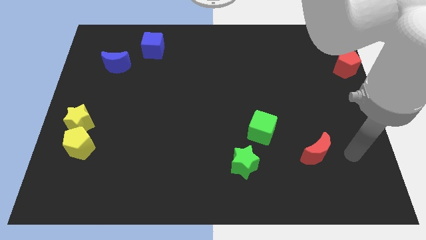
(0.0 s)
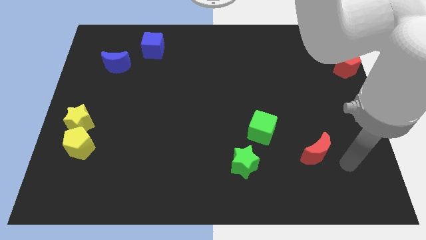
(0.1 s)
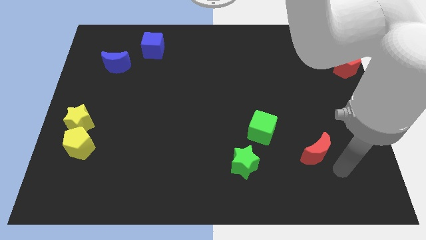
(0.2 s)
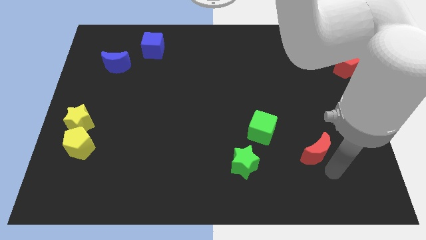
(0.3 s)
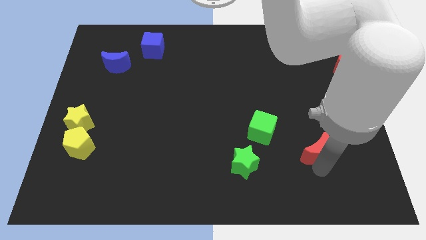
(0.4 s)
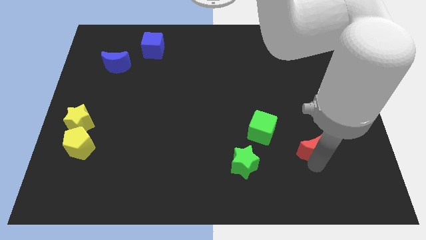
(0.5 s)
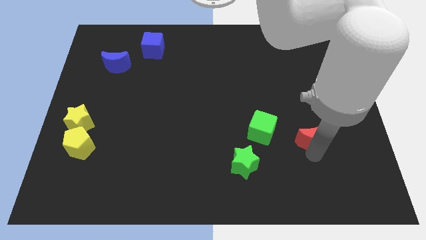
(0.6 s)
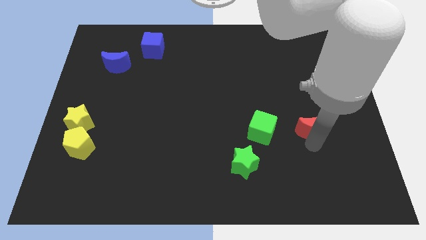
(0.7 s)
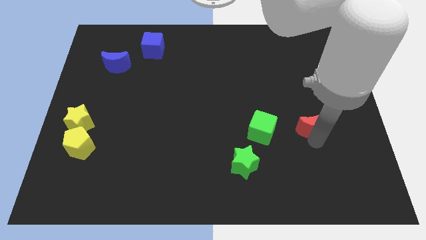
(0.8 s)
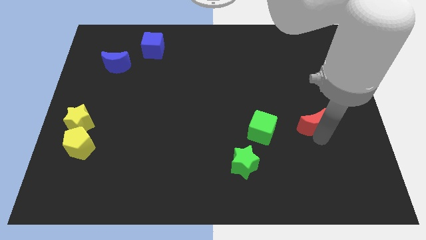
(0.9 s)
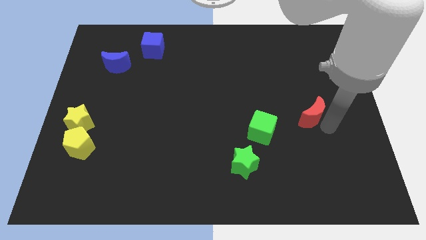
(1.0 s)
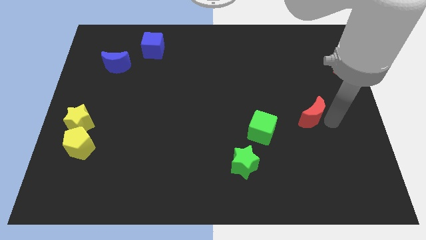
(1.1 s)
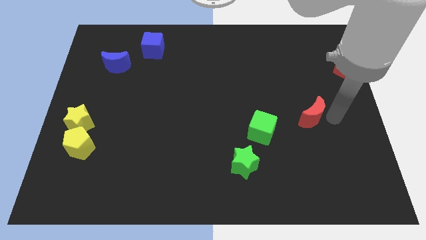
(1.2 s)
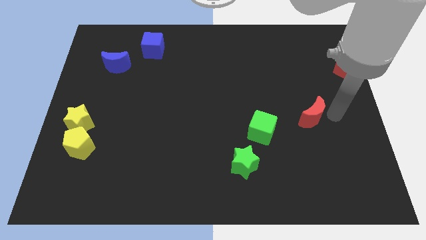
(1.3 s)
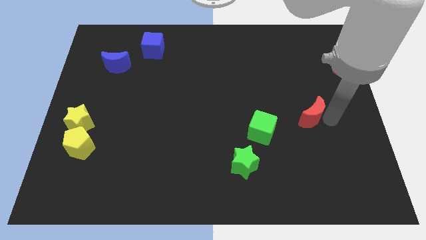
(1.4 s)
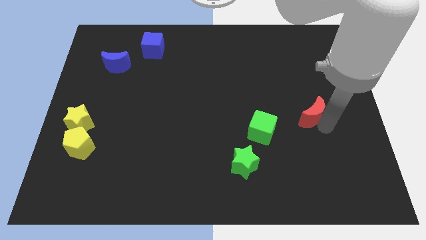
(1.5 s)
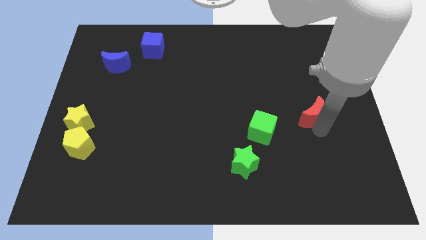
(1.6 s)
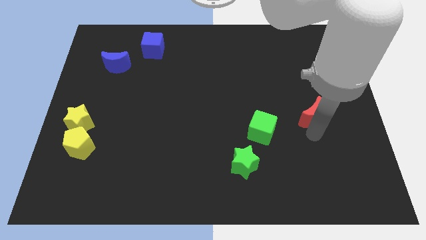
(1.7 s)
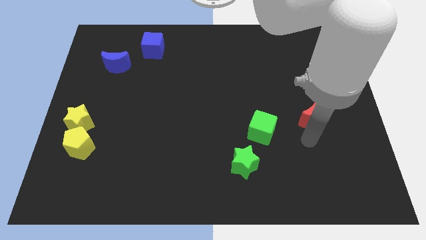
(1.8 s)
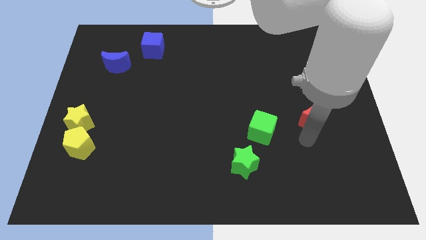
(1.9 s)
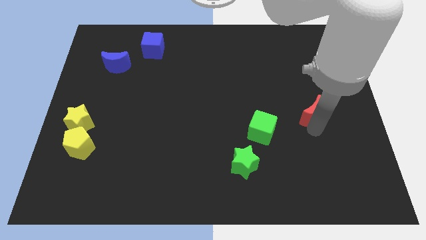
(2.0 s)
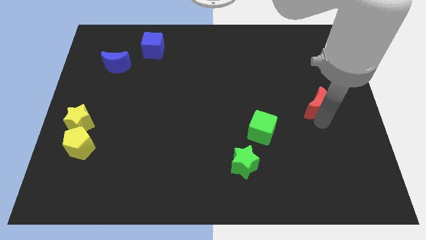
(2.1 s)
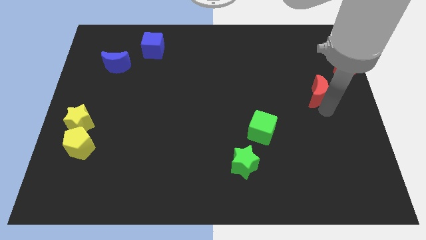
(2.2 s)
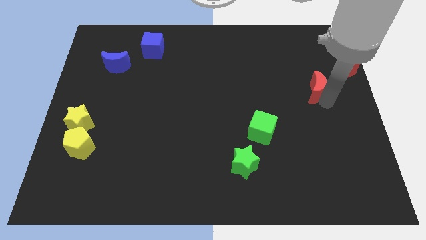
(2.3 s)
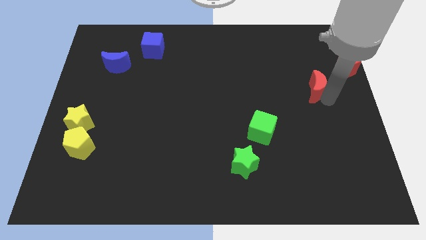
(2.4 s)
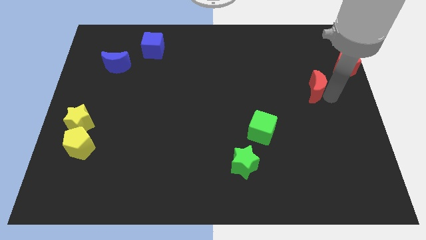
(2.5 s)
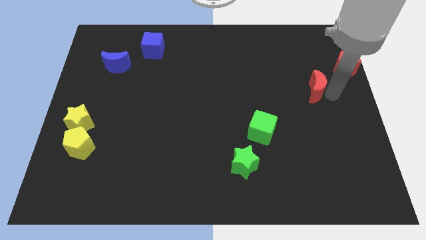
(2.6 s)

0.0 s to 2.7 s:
place the red moon below diagonal to the red pentagon

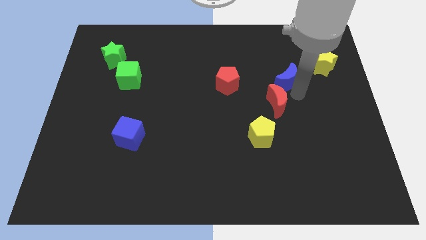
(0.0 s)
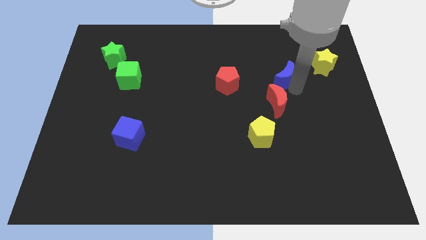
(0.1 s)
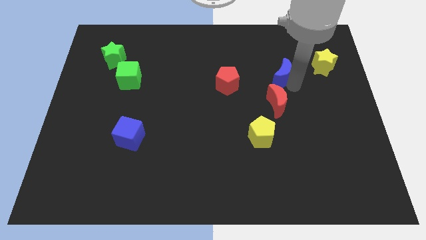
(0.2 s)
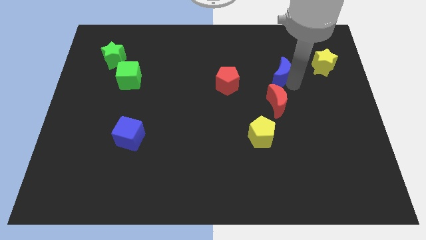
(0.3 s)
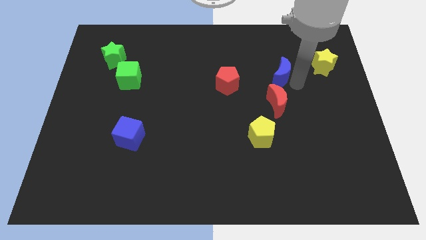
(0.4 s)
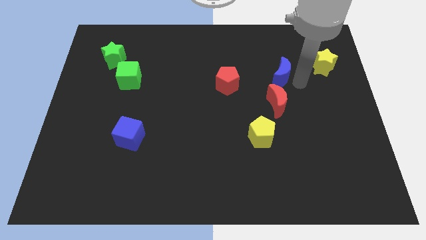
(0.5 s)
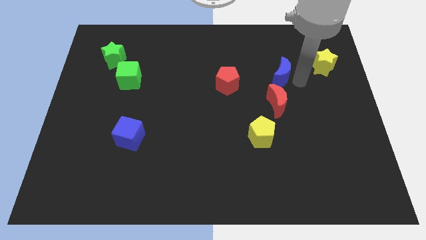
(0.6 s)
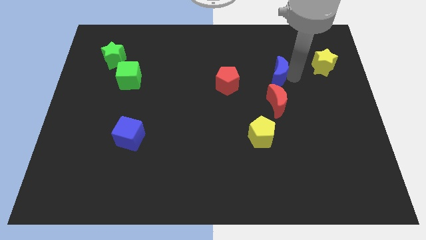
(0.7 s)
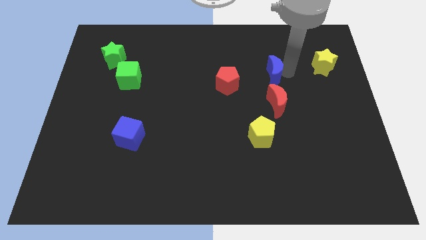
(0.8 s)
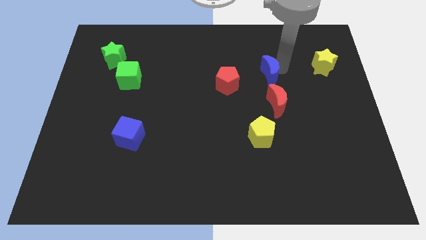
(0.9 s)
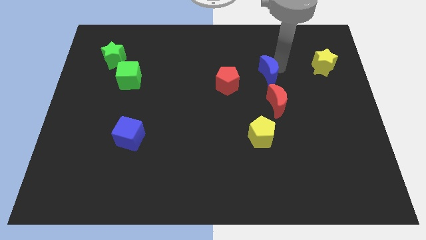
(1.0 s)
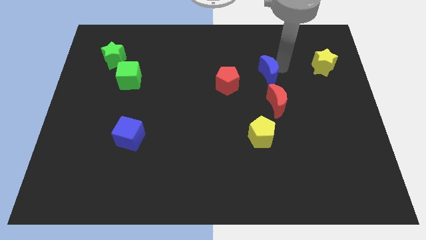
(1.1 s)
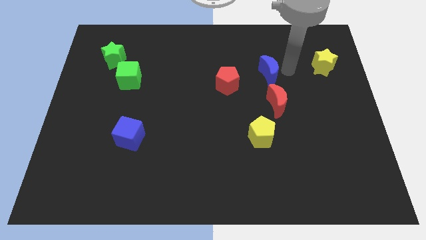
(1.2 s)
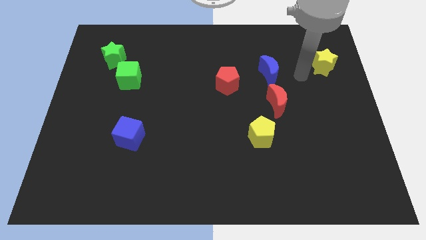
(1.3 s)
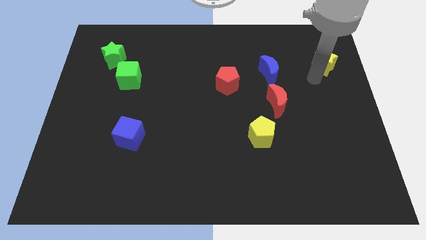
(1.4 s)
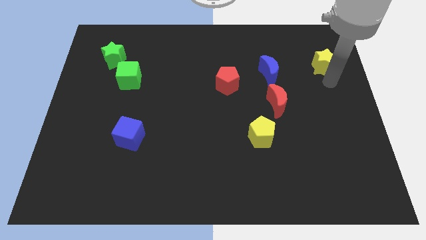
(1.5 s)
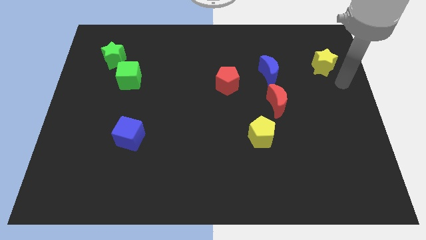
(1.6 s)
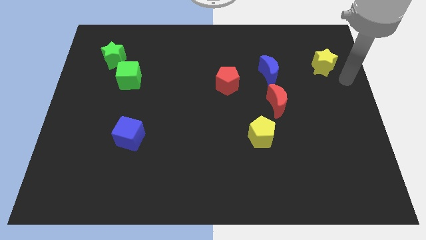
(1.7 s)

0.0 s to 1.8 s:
place the blue crescent above the red crescent

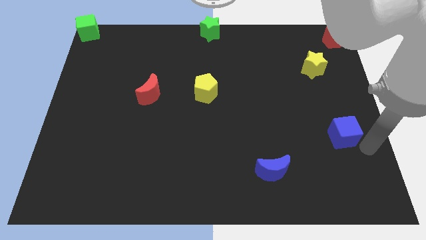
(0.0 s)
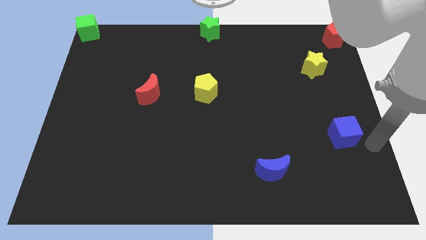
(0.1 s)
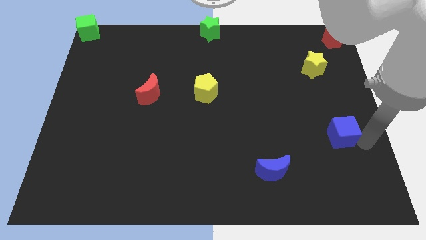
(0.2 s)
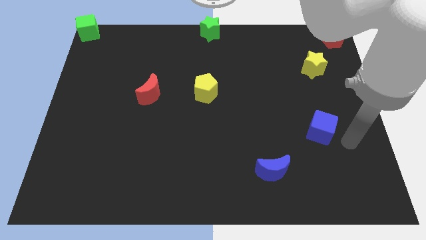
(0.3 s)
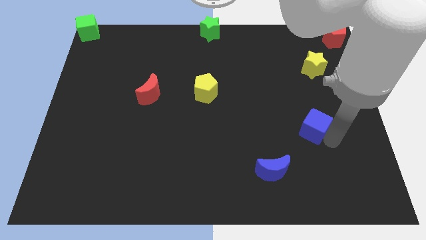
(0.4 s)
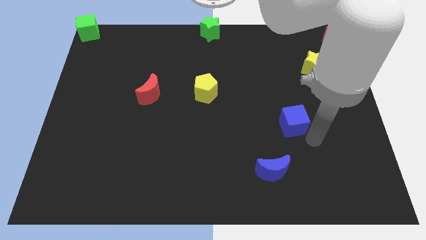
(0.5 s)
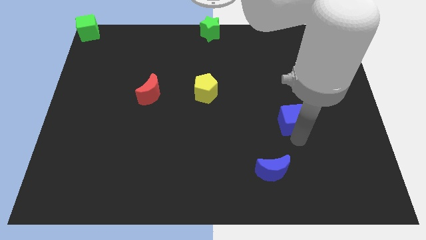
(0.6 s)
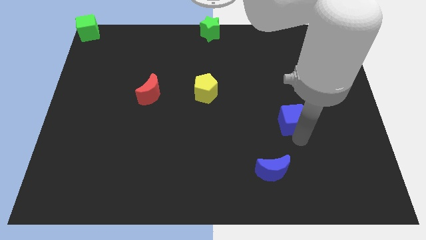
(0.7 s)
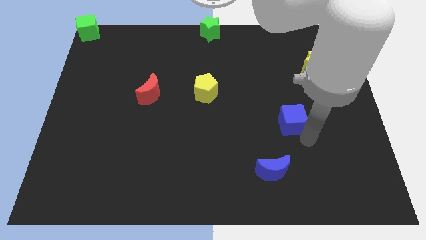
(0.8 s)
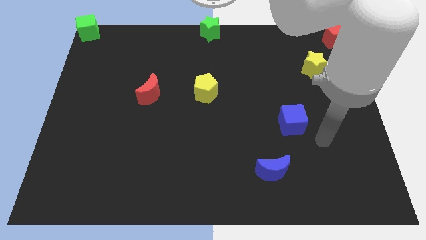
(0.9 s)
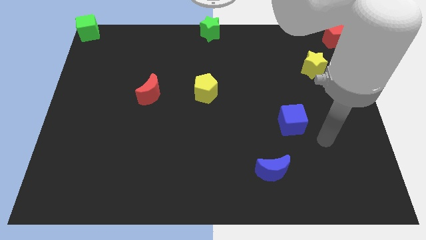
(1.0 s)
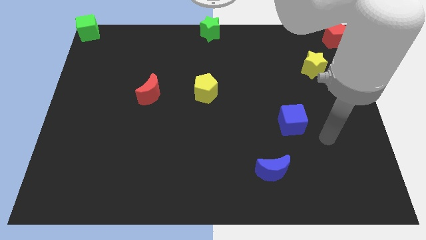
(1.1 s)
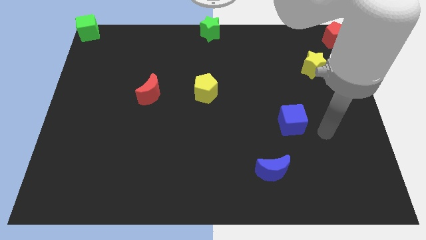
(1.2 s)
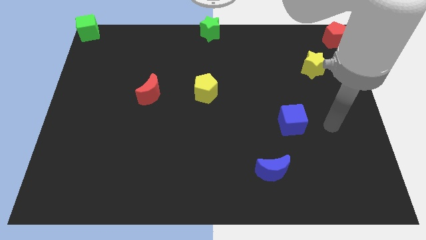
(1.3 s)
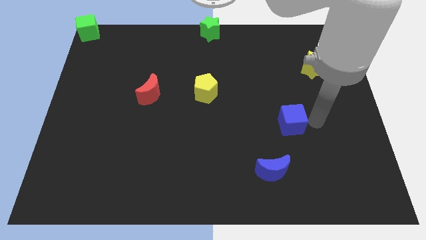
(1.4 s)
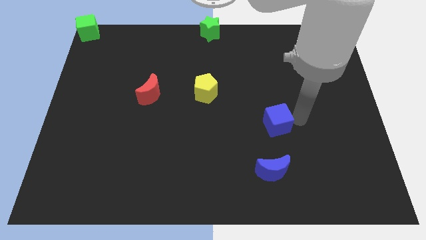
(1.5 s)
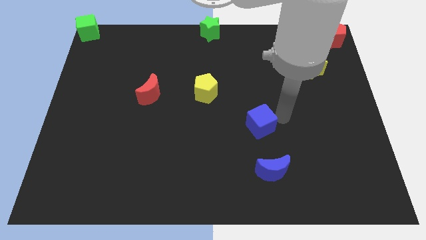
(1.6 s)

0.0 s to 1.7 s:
push blue cube above blue crescent

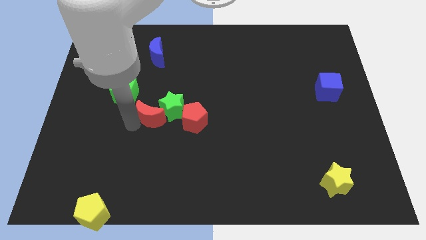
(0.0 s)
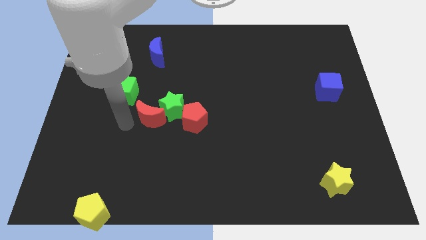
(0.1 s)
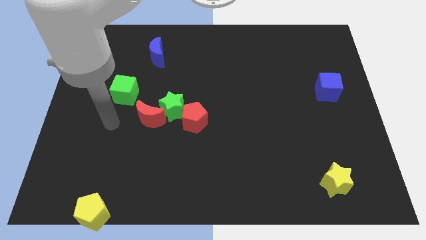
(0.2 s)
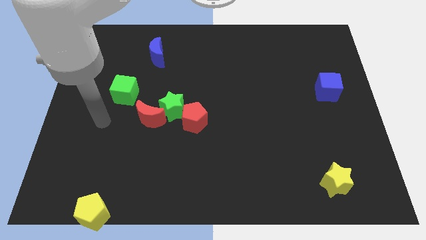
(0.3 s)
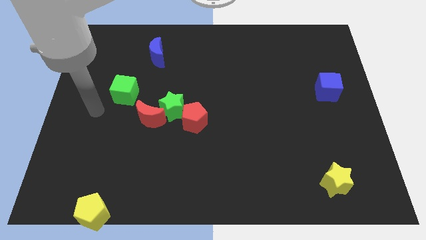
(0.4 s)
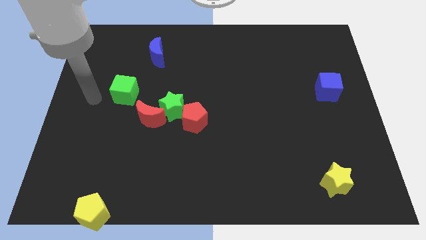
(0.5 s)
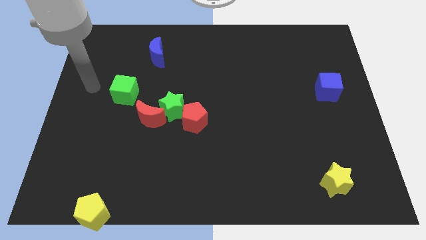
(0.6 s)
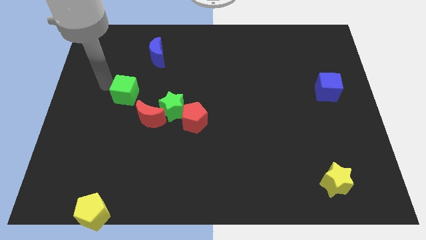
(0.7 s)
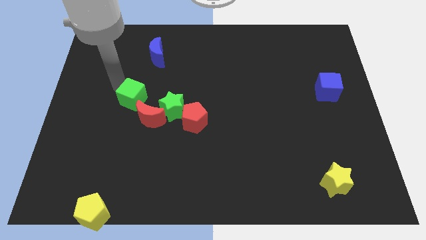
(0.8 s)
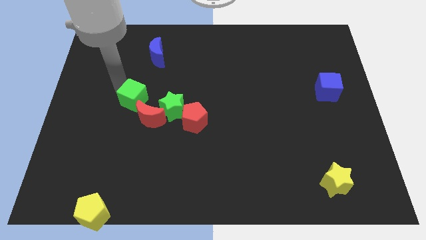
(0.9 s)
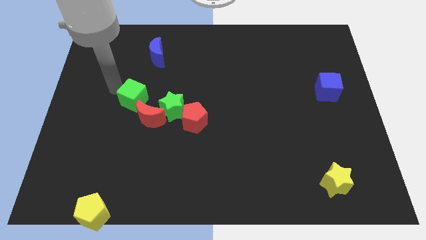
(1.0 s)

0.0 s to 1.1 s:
place your arm close to green cube

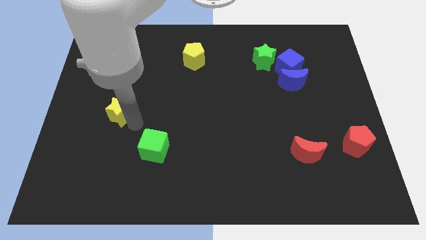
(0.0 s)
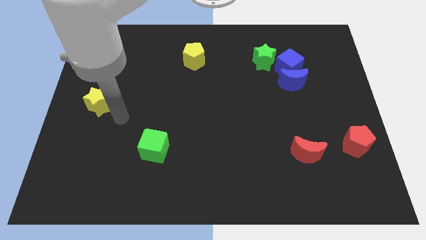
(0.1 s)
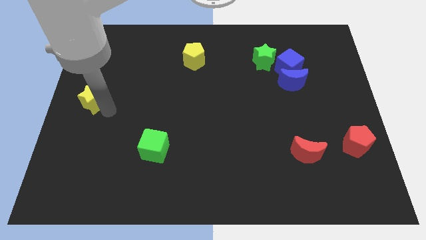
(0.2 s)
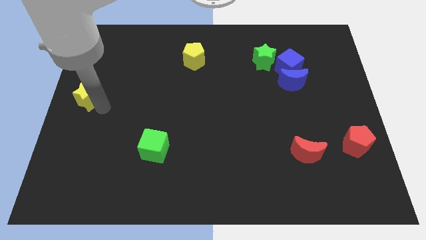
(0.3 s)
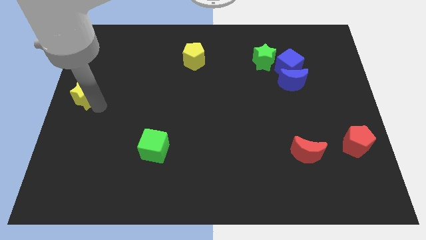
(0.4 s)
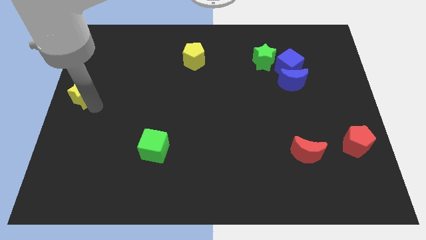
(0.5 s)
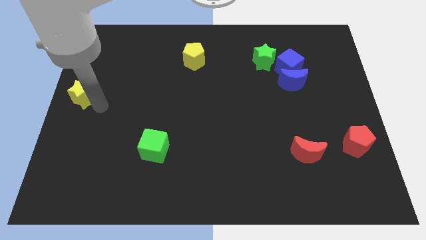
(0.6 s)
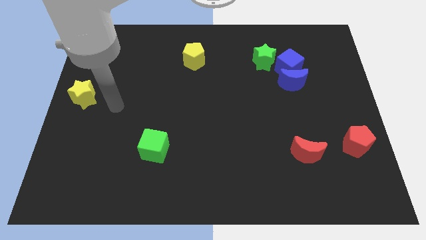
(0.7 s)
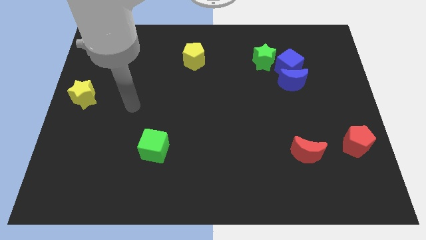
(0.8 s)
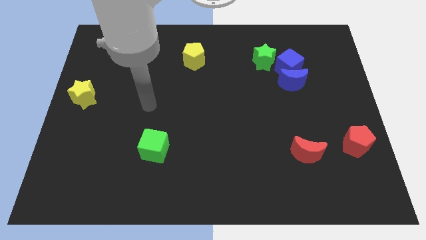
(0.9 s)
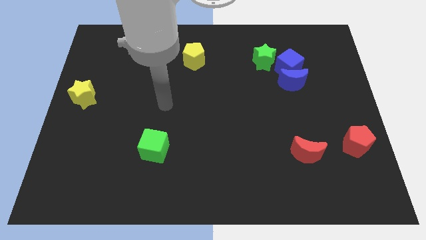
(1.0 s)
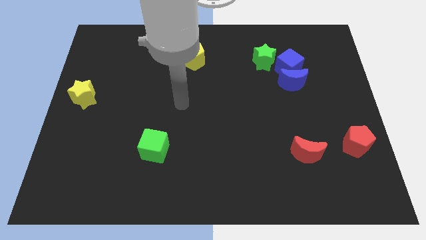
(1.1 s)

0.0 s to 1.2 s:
push the yellow star to the center left of the board

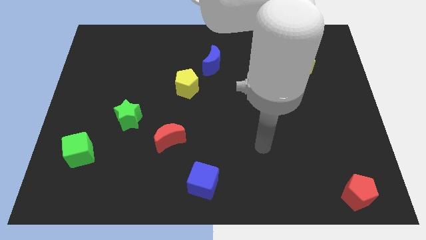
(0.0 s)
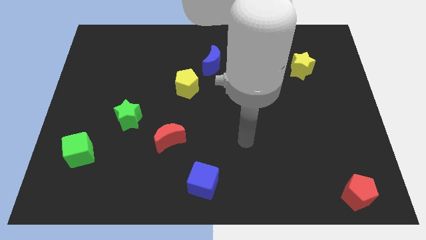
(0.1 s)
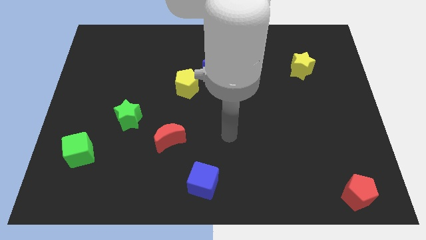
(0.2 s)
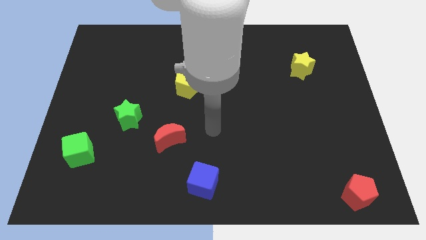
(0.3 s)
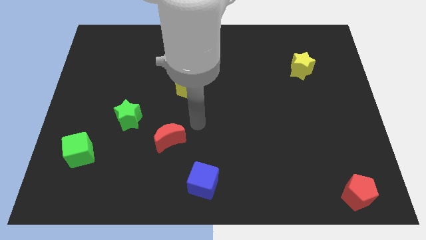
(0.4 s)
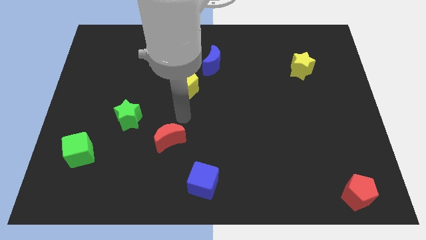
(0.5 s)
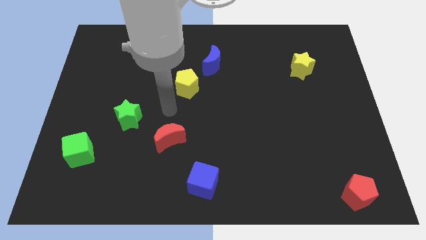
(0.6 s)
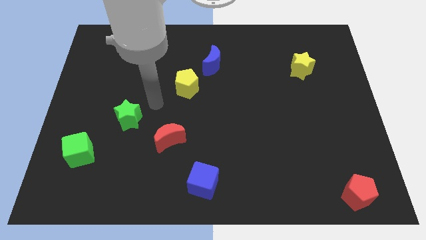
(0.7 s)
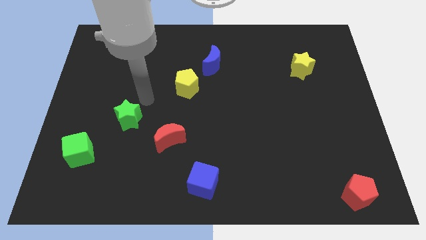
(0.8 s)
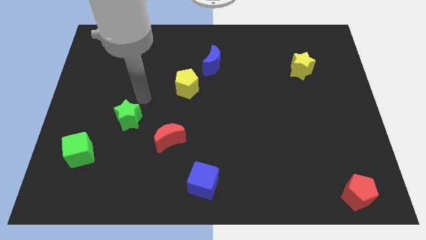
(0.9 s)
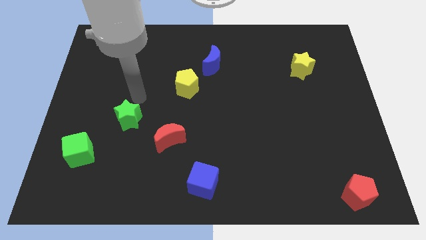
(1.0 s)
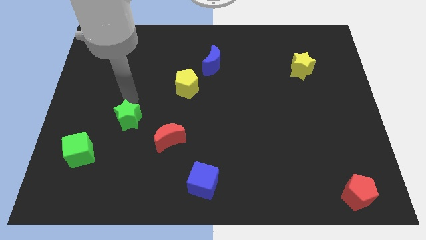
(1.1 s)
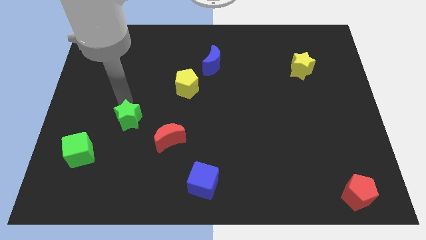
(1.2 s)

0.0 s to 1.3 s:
put your arm at the top of green star
